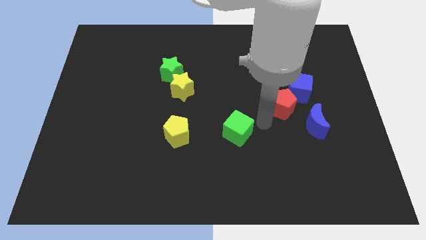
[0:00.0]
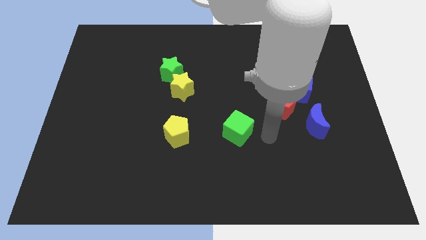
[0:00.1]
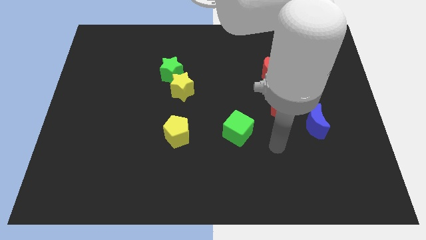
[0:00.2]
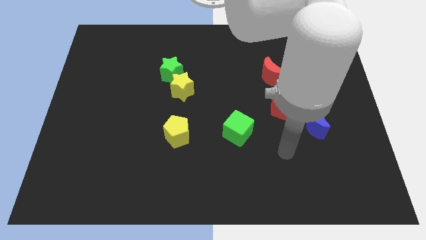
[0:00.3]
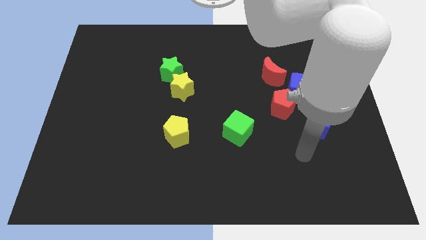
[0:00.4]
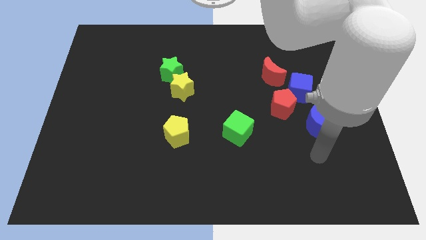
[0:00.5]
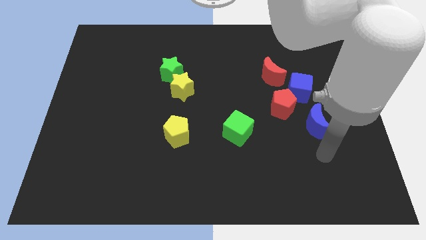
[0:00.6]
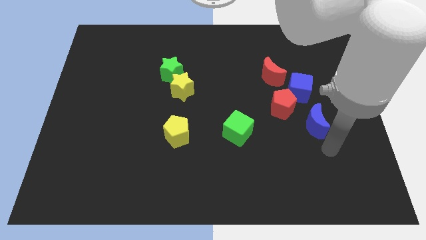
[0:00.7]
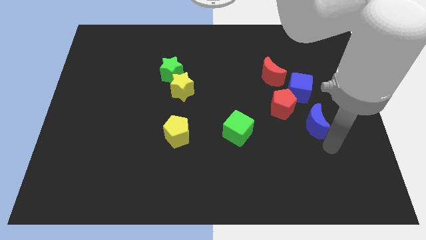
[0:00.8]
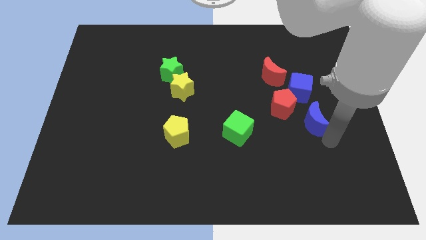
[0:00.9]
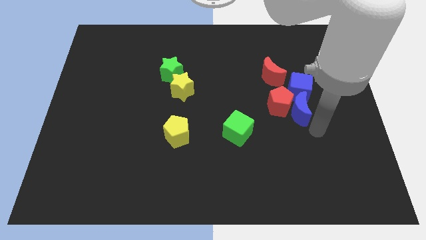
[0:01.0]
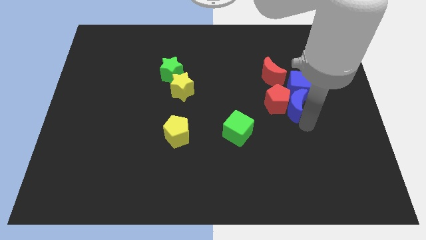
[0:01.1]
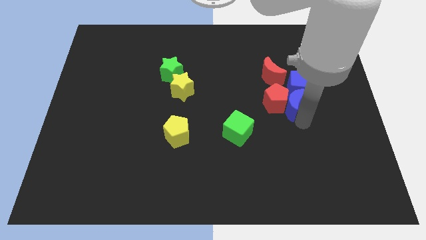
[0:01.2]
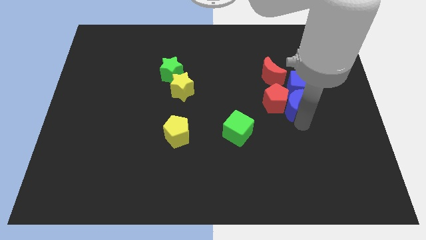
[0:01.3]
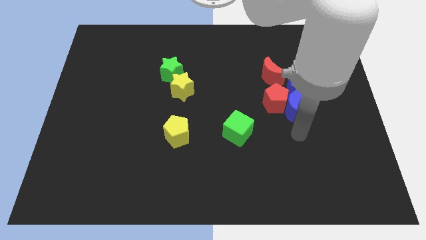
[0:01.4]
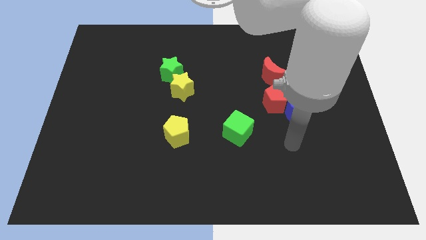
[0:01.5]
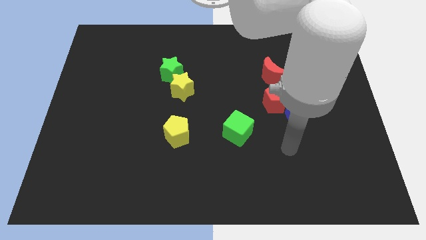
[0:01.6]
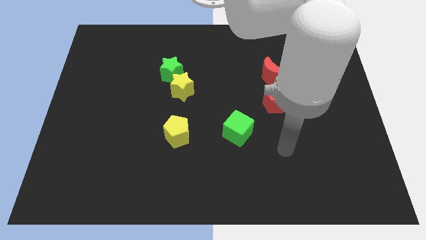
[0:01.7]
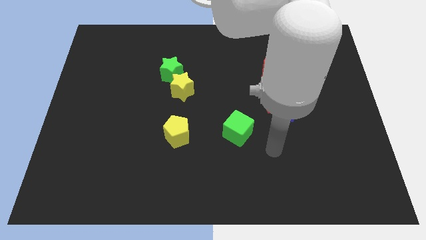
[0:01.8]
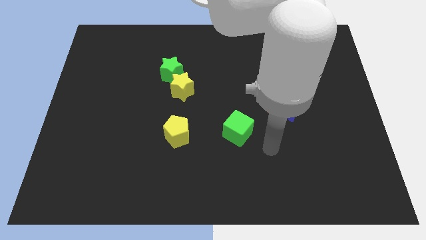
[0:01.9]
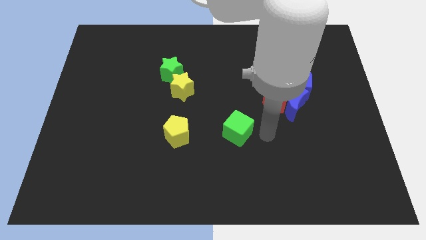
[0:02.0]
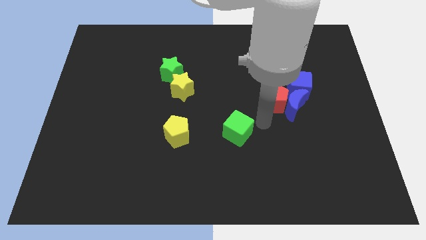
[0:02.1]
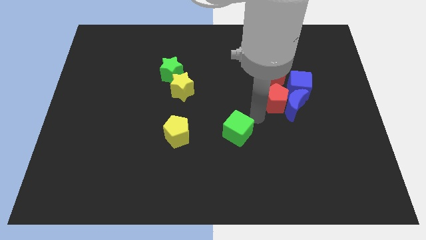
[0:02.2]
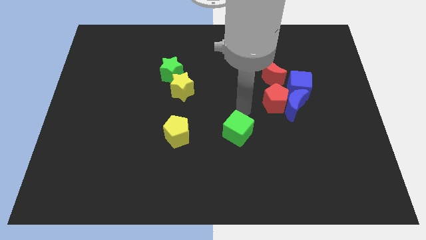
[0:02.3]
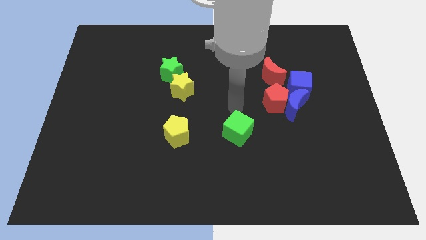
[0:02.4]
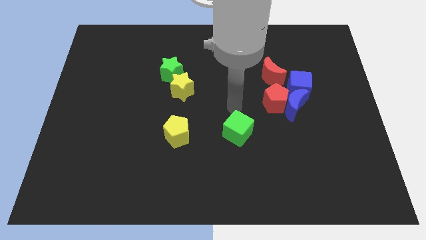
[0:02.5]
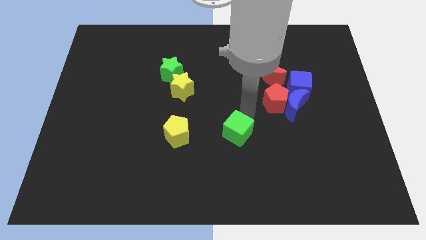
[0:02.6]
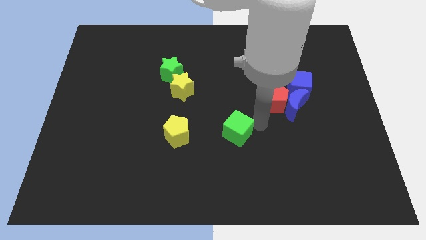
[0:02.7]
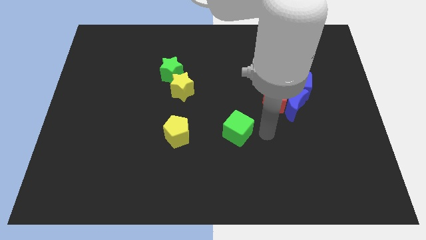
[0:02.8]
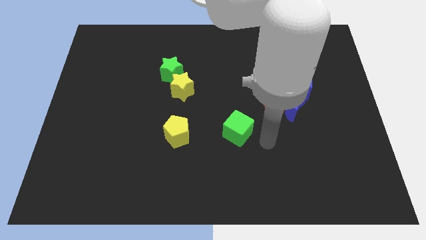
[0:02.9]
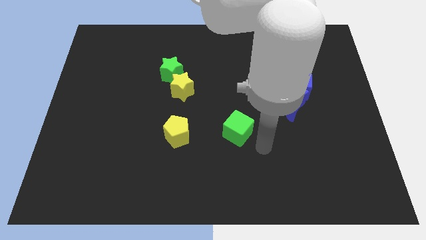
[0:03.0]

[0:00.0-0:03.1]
join the blue crescent with the red blocks and the blue cube

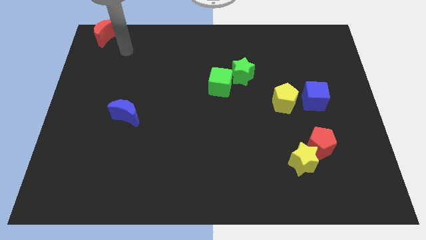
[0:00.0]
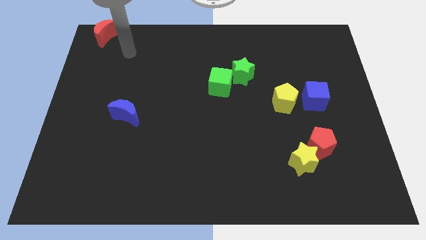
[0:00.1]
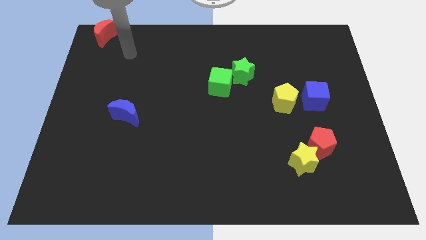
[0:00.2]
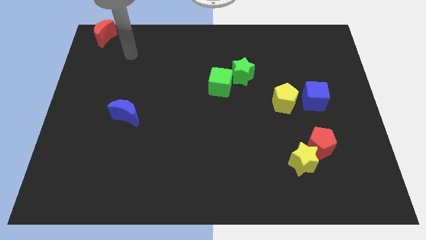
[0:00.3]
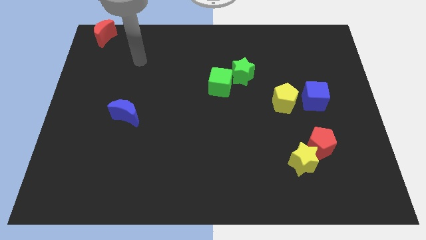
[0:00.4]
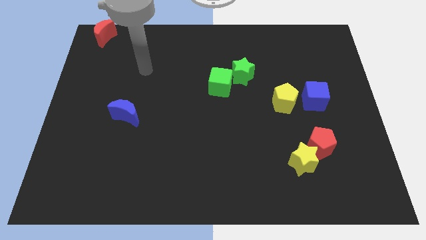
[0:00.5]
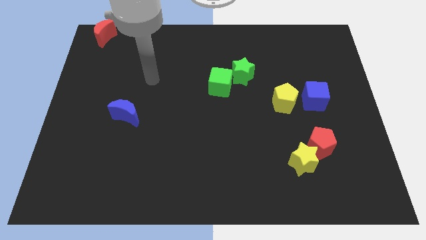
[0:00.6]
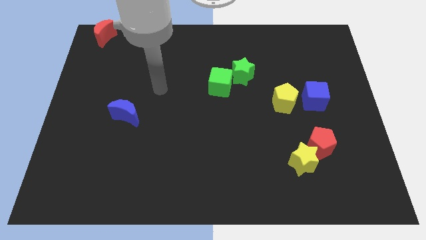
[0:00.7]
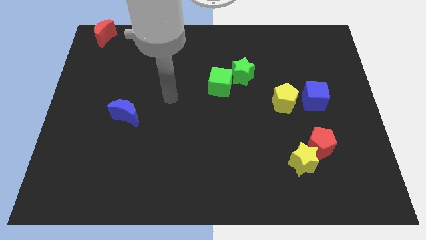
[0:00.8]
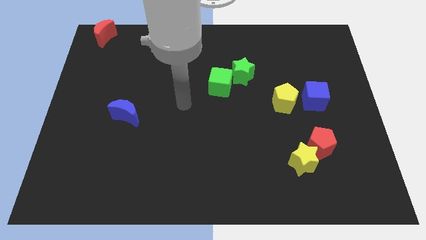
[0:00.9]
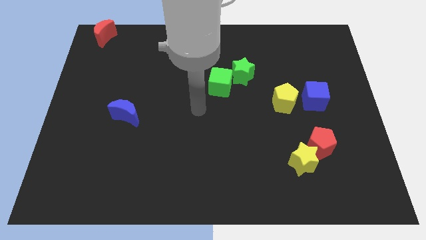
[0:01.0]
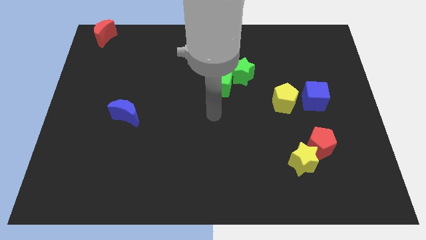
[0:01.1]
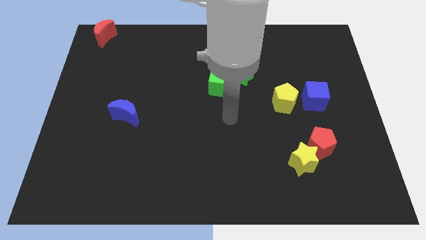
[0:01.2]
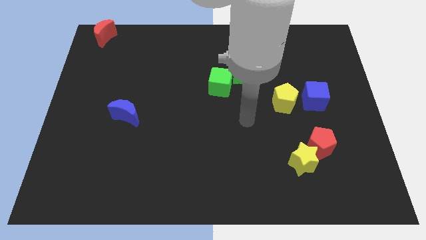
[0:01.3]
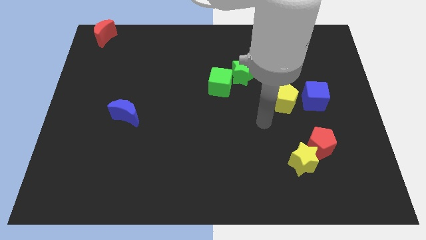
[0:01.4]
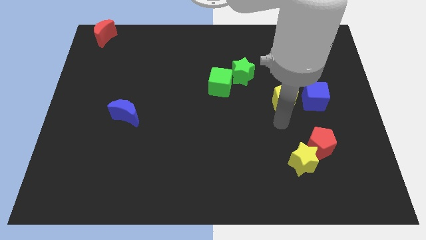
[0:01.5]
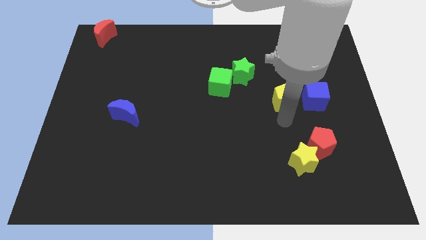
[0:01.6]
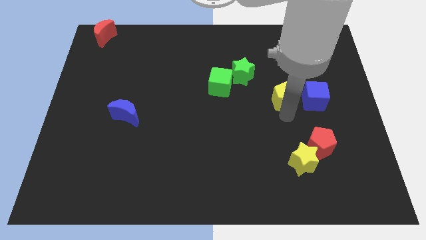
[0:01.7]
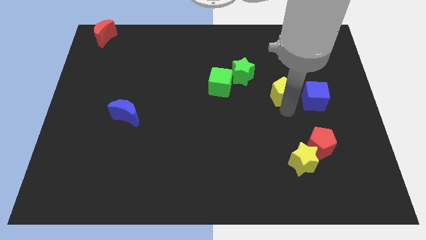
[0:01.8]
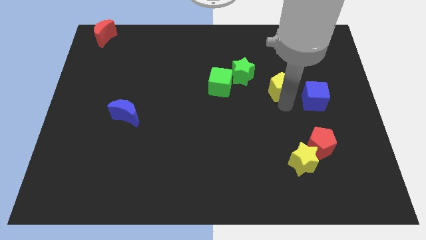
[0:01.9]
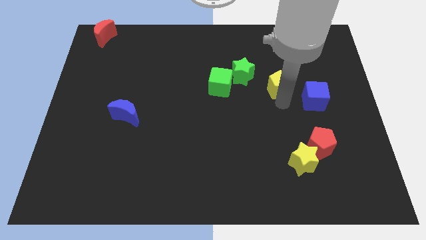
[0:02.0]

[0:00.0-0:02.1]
slightly push the yellow pentagon upwards

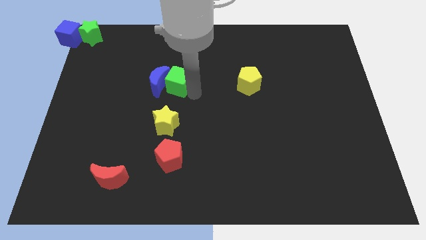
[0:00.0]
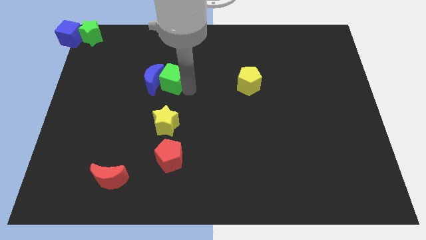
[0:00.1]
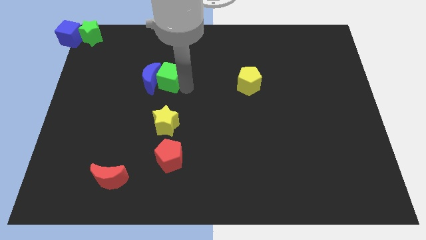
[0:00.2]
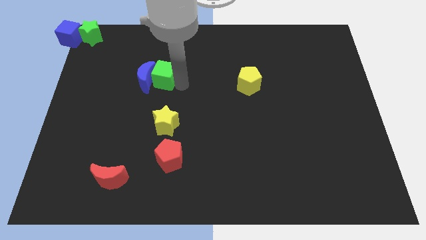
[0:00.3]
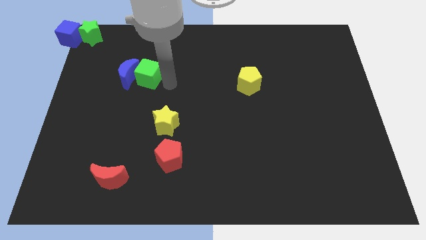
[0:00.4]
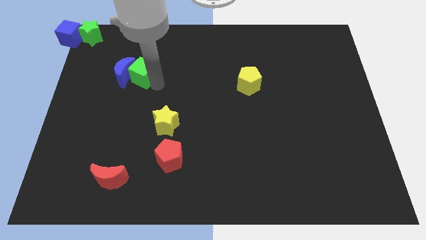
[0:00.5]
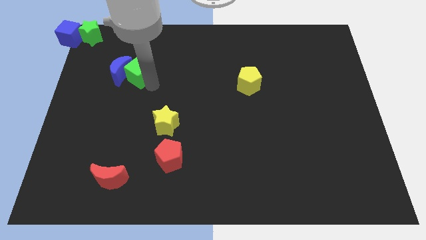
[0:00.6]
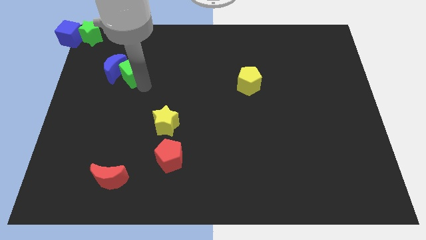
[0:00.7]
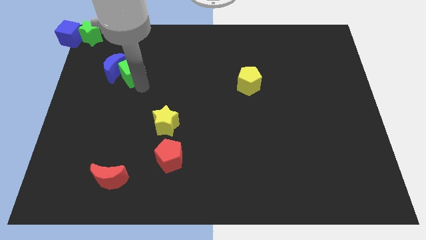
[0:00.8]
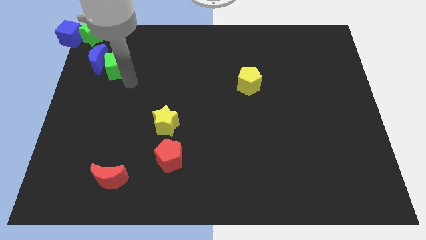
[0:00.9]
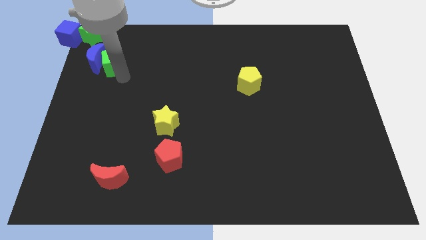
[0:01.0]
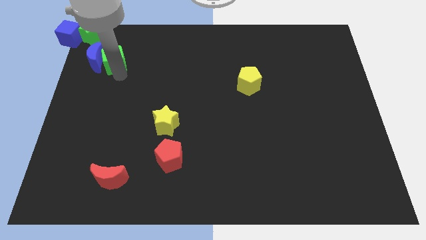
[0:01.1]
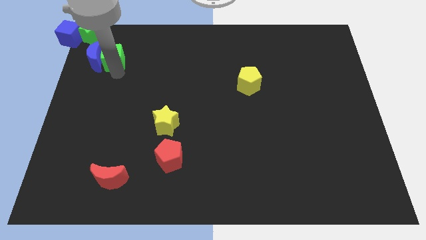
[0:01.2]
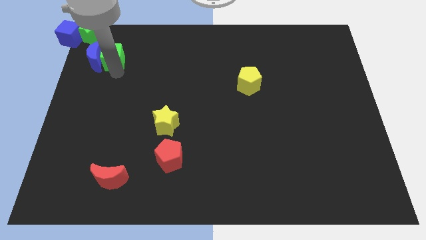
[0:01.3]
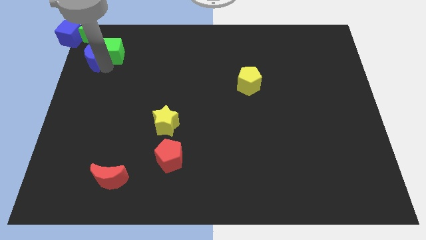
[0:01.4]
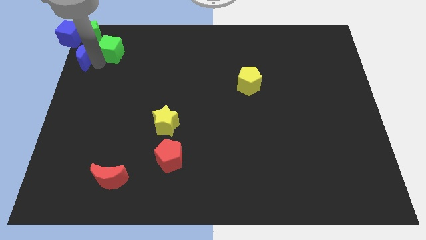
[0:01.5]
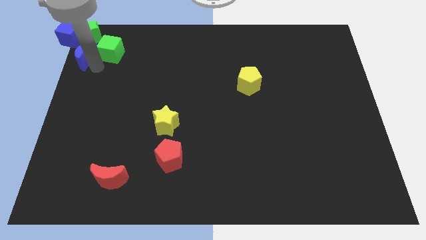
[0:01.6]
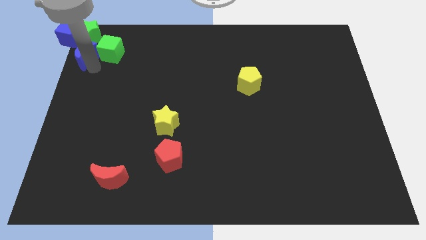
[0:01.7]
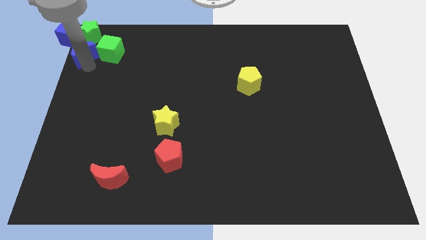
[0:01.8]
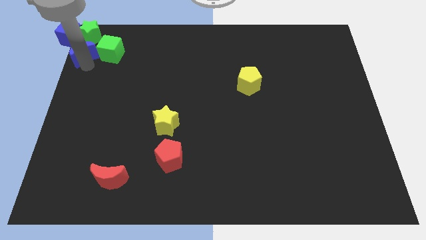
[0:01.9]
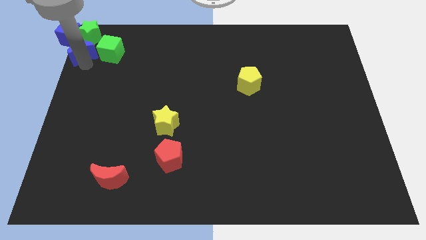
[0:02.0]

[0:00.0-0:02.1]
move the green cube along with the blue crescent to the bottom of the green star

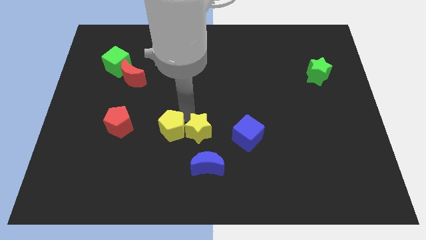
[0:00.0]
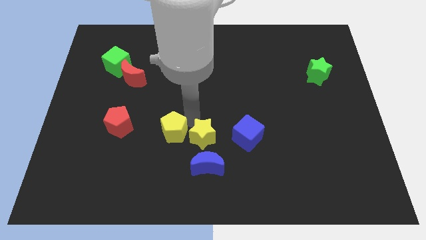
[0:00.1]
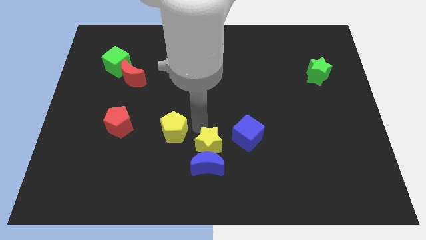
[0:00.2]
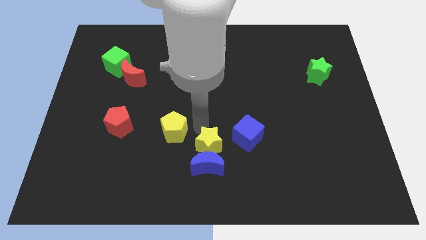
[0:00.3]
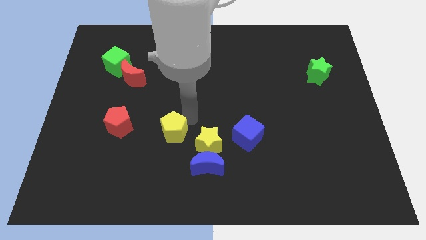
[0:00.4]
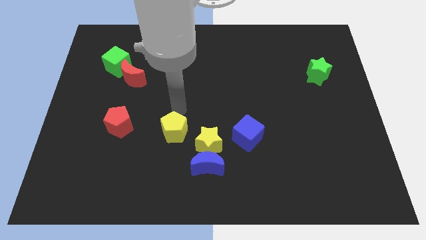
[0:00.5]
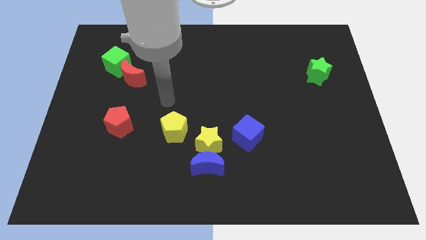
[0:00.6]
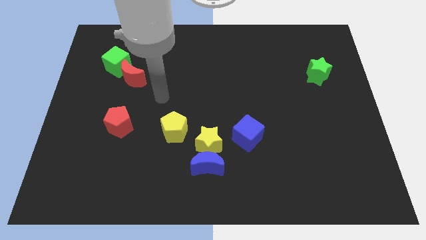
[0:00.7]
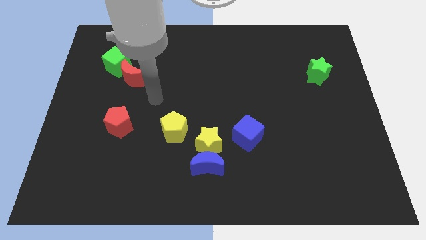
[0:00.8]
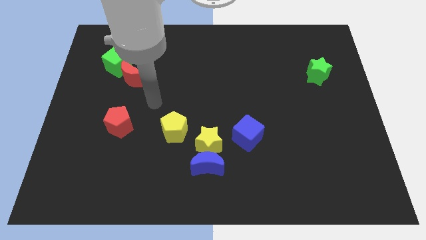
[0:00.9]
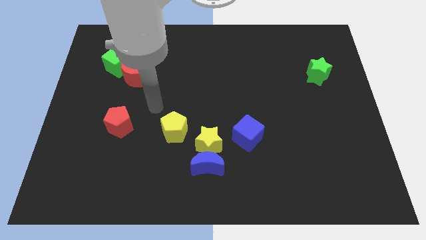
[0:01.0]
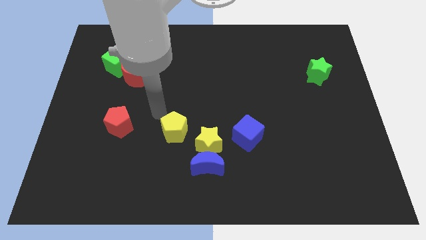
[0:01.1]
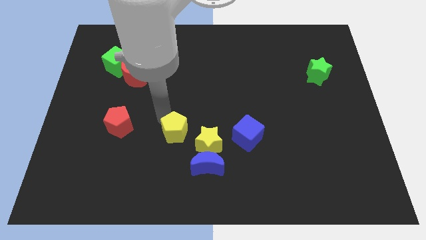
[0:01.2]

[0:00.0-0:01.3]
push the yellow star diagnol to the blue cube

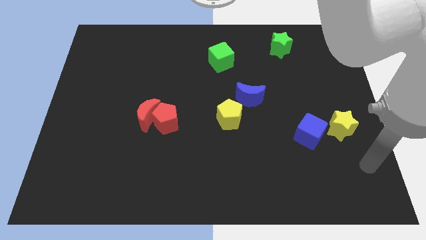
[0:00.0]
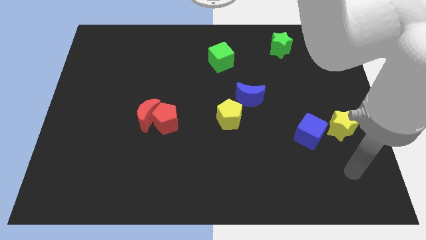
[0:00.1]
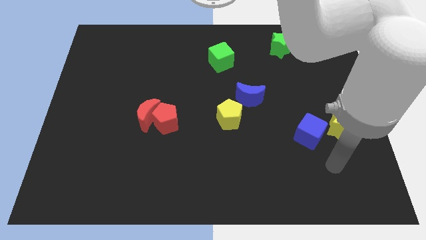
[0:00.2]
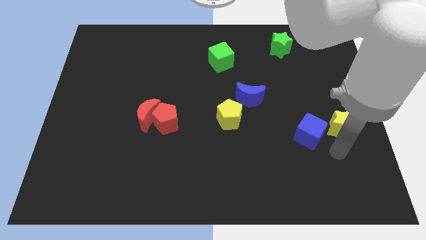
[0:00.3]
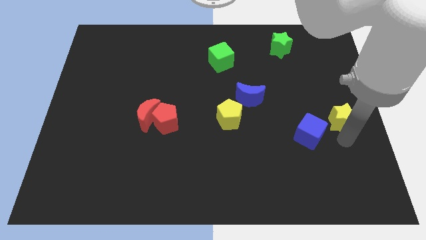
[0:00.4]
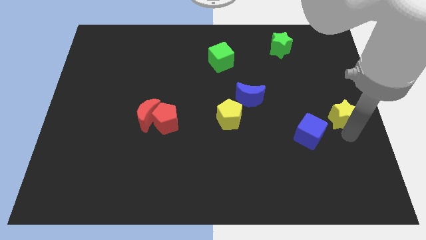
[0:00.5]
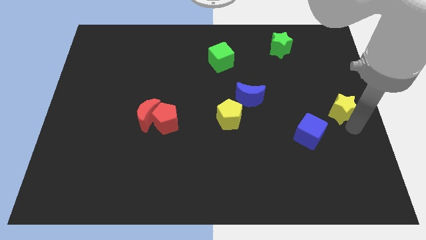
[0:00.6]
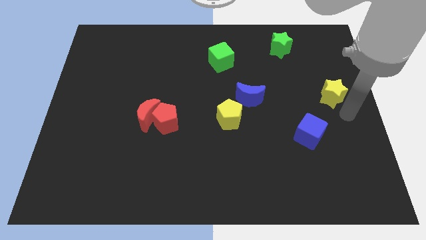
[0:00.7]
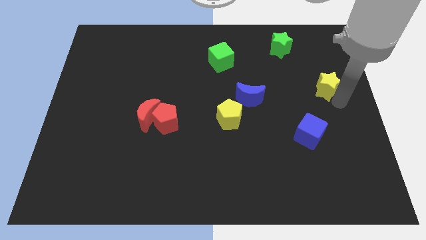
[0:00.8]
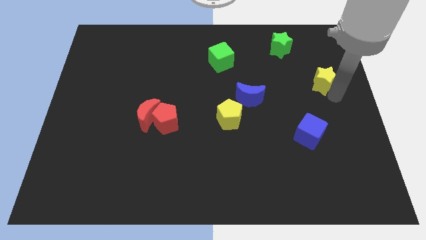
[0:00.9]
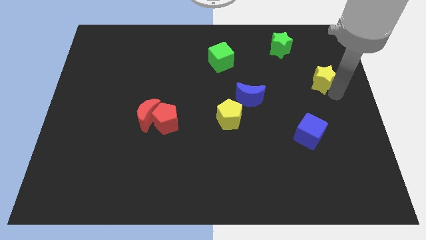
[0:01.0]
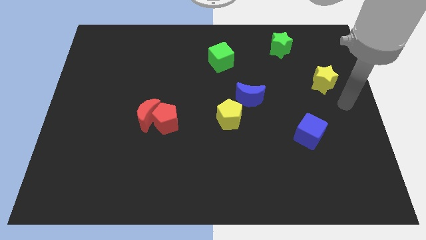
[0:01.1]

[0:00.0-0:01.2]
place the yellow star above the blue cube
